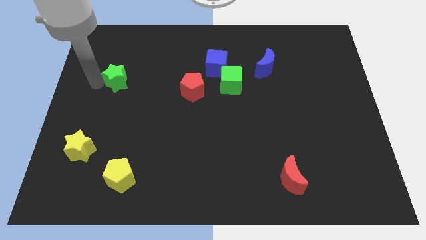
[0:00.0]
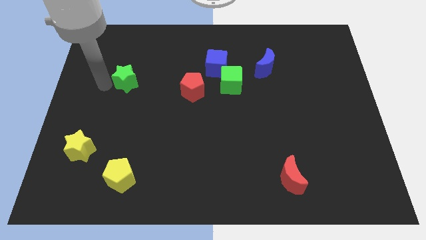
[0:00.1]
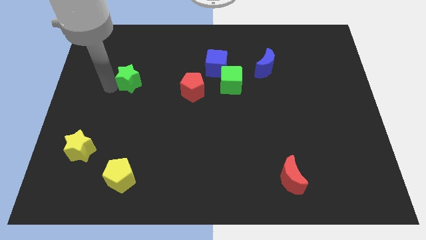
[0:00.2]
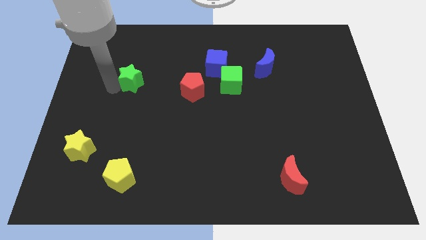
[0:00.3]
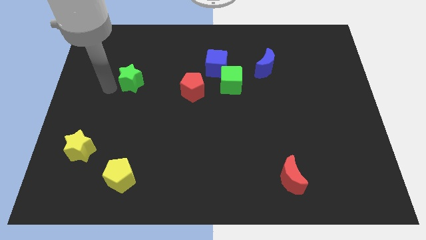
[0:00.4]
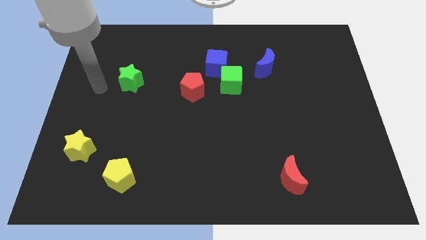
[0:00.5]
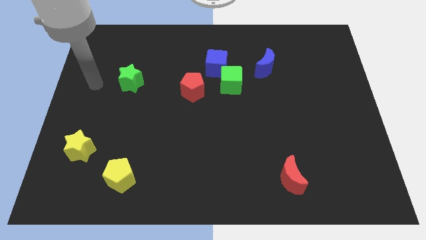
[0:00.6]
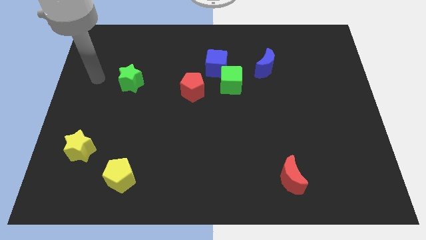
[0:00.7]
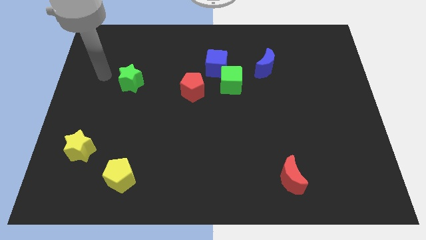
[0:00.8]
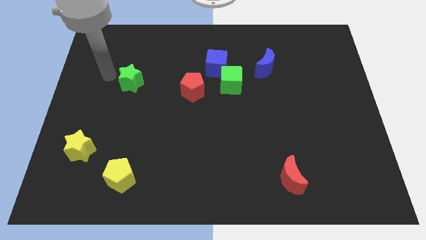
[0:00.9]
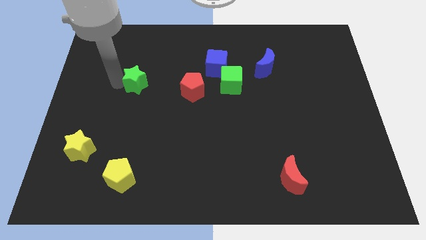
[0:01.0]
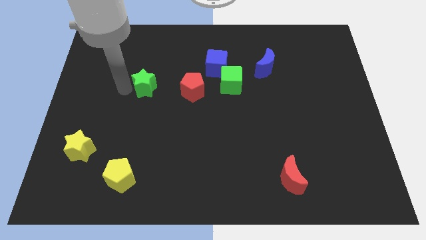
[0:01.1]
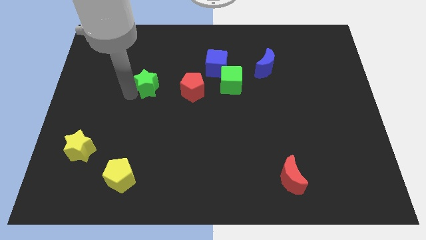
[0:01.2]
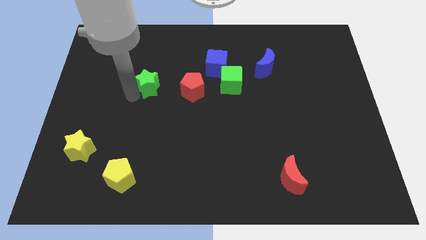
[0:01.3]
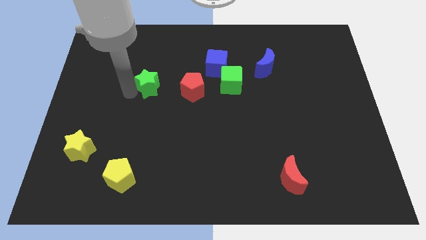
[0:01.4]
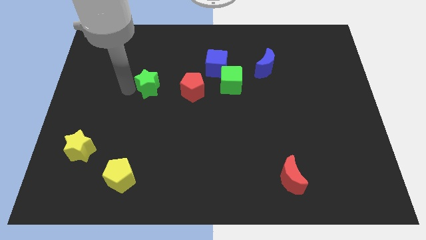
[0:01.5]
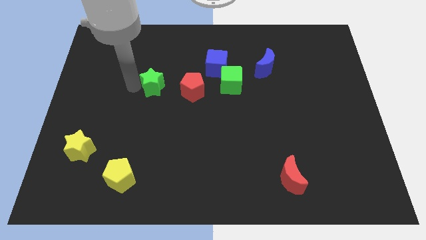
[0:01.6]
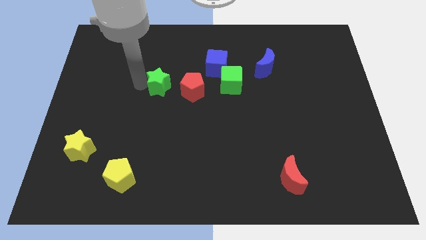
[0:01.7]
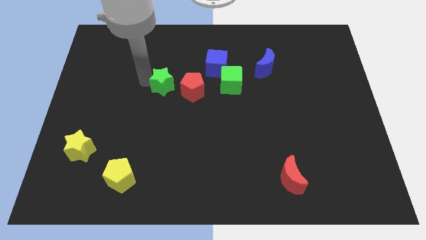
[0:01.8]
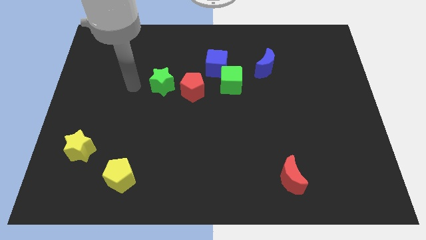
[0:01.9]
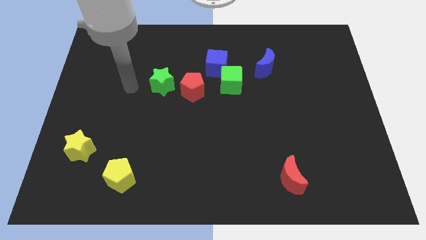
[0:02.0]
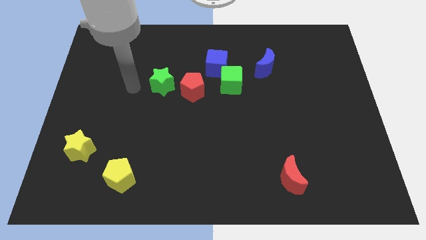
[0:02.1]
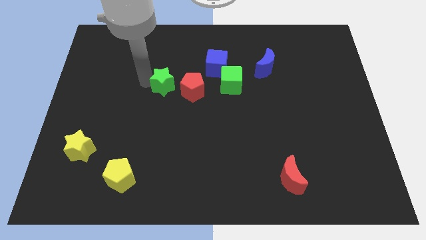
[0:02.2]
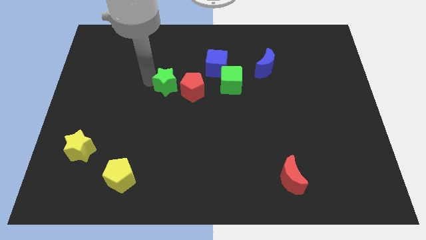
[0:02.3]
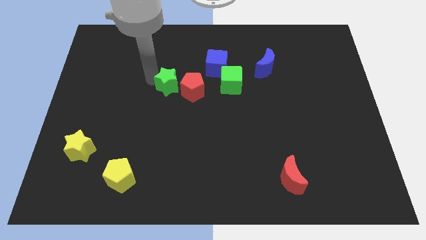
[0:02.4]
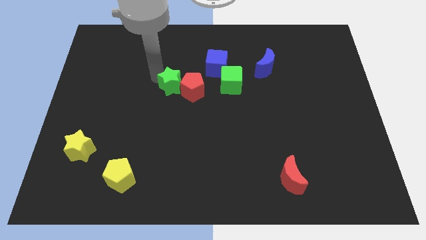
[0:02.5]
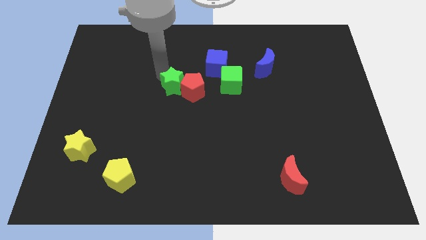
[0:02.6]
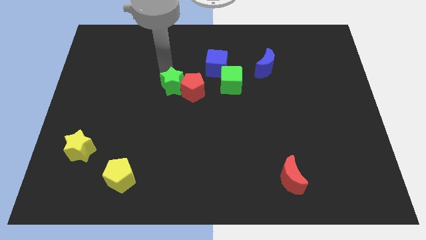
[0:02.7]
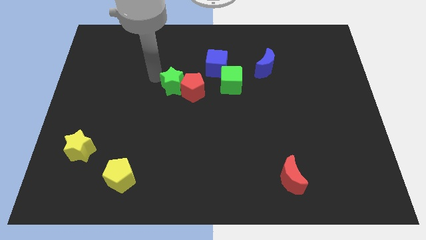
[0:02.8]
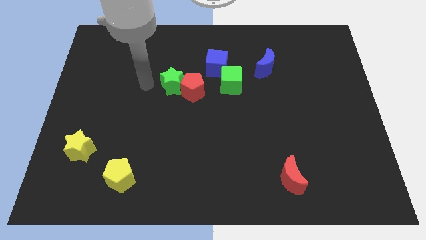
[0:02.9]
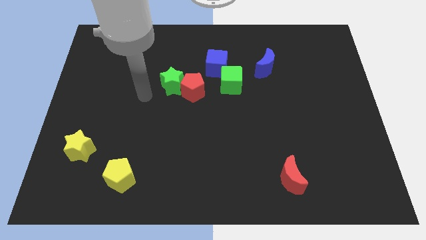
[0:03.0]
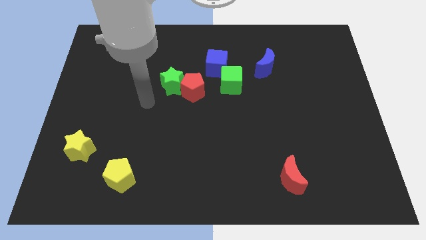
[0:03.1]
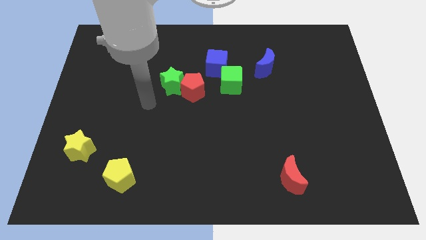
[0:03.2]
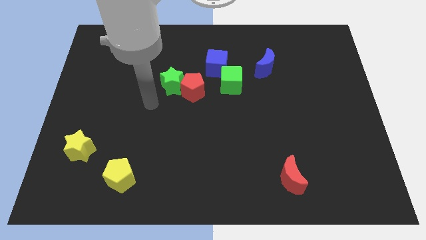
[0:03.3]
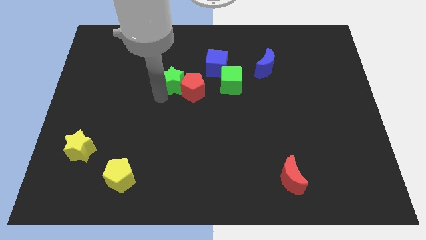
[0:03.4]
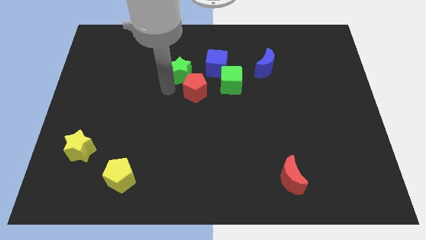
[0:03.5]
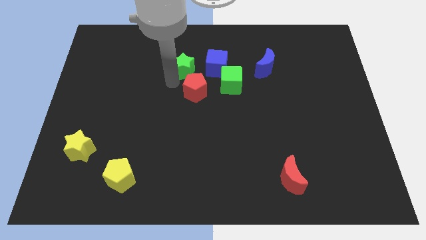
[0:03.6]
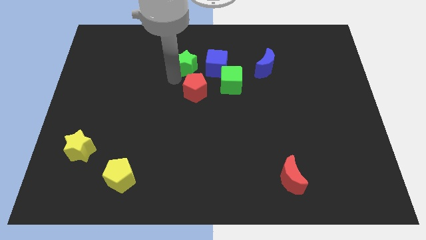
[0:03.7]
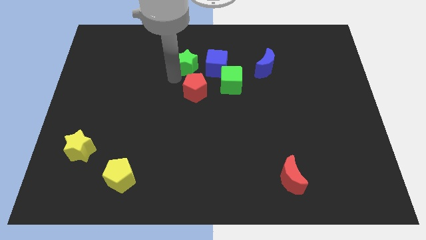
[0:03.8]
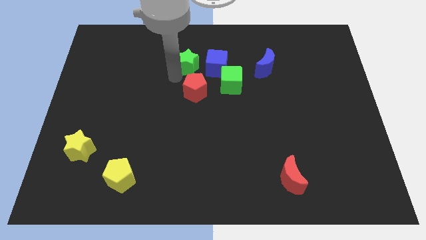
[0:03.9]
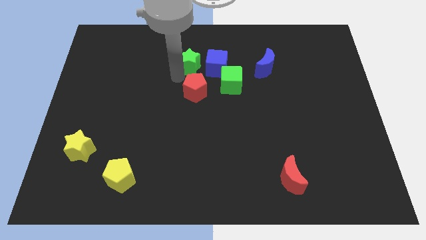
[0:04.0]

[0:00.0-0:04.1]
place green star to the left of blue cube

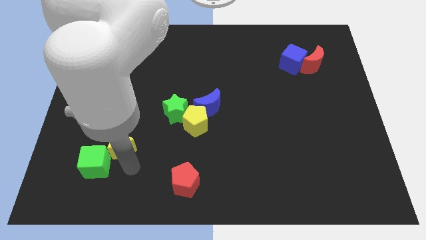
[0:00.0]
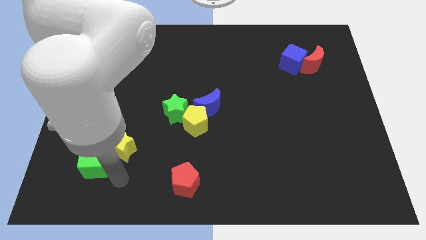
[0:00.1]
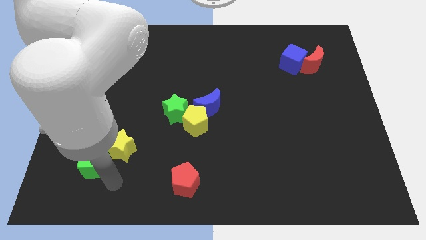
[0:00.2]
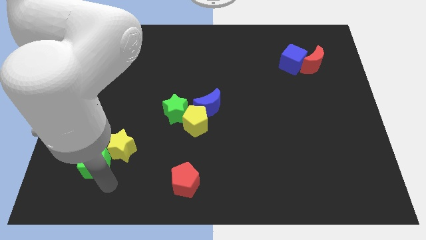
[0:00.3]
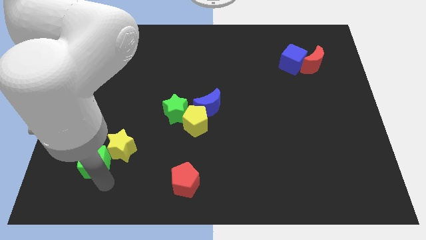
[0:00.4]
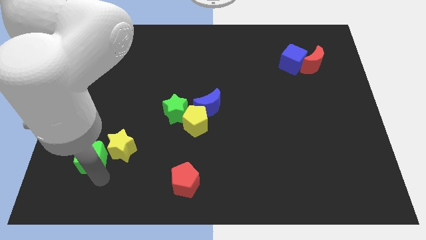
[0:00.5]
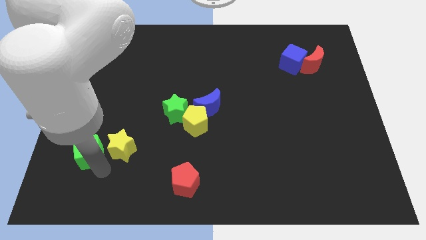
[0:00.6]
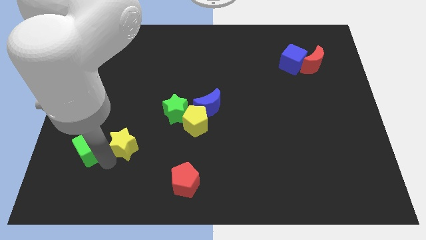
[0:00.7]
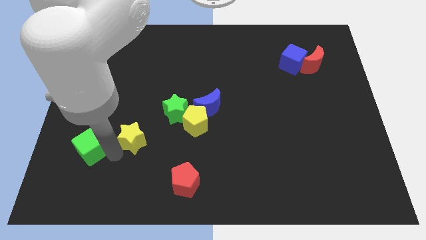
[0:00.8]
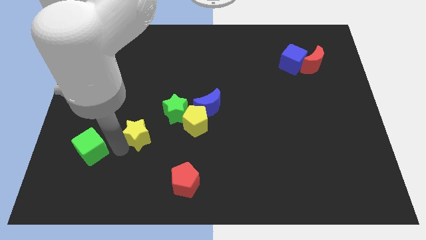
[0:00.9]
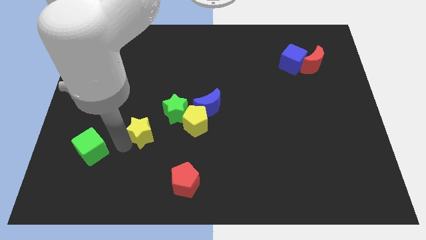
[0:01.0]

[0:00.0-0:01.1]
separate yellow star and green cube

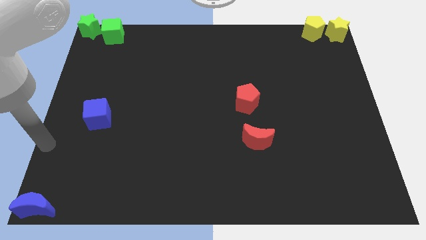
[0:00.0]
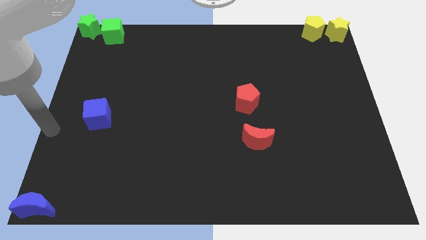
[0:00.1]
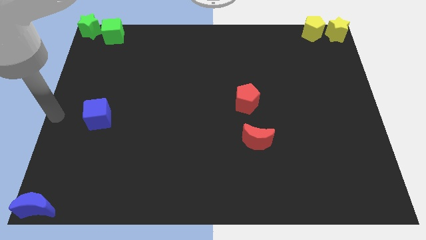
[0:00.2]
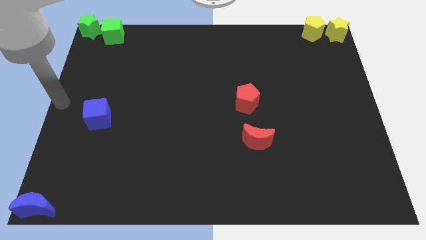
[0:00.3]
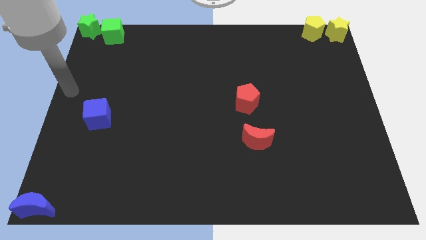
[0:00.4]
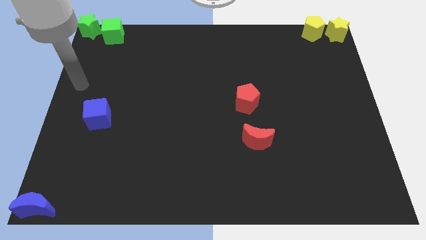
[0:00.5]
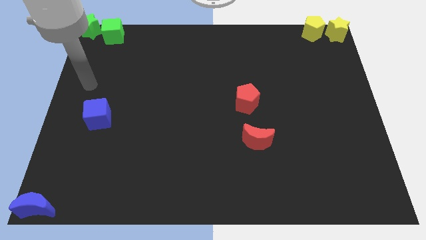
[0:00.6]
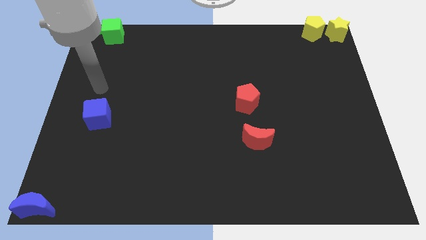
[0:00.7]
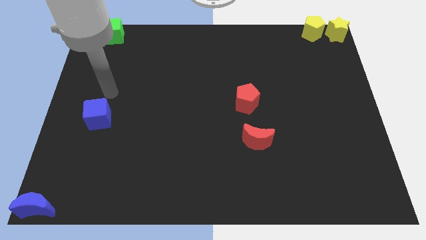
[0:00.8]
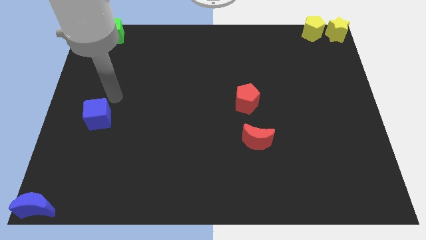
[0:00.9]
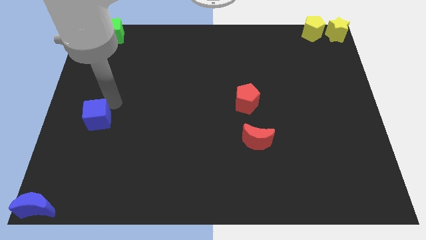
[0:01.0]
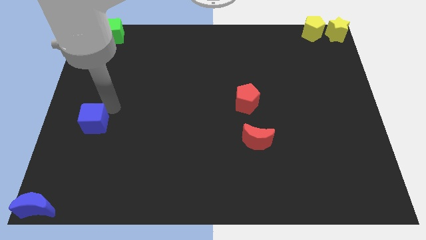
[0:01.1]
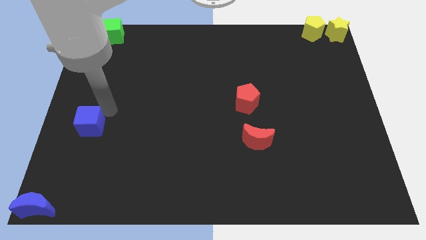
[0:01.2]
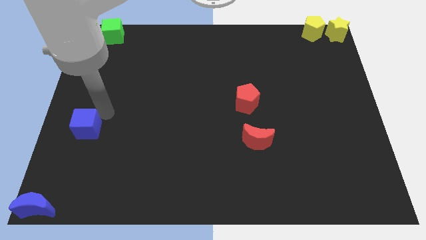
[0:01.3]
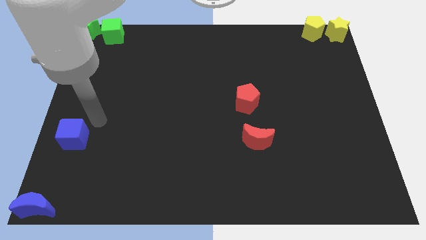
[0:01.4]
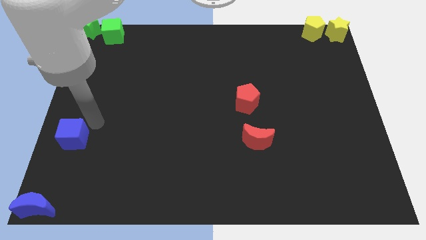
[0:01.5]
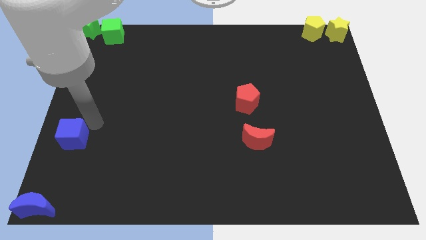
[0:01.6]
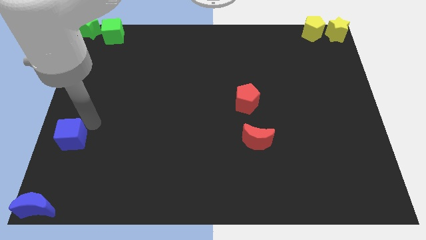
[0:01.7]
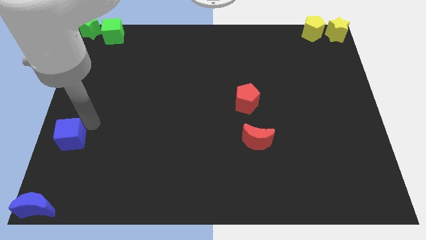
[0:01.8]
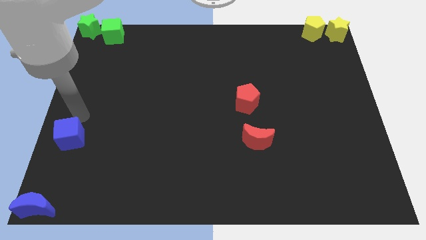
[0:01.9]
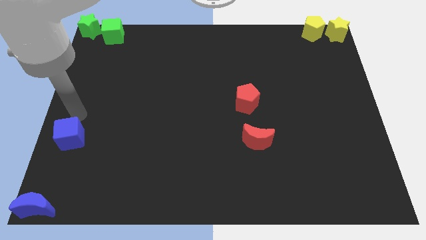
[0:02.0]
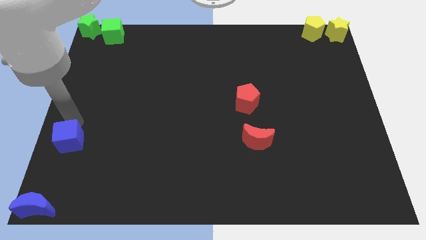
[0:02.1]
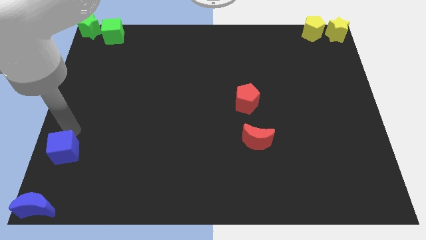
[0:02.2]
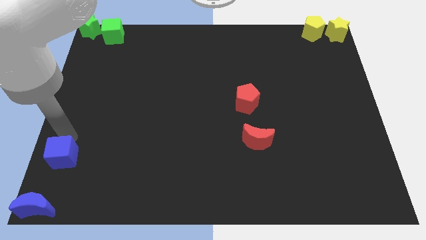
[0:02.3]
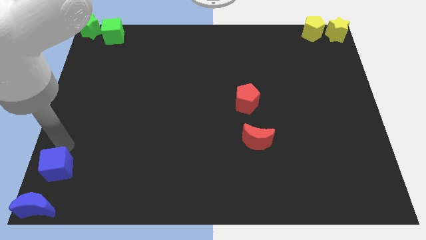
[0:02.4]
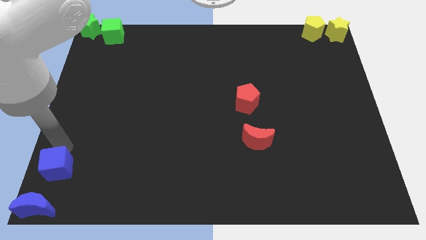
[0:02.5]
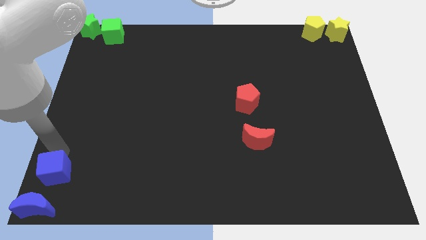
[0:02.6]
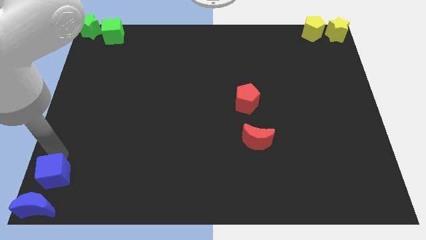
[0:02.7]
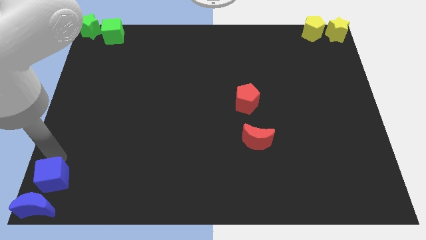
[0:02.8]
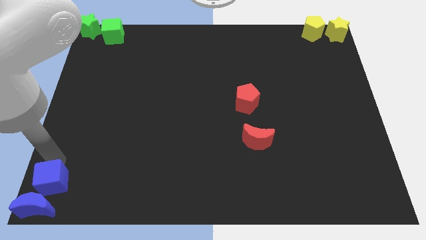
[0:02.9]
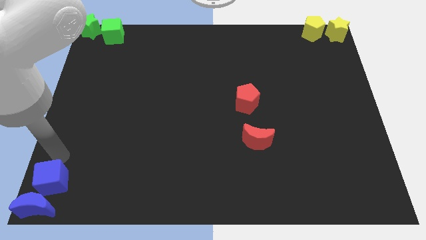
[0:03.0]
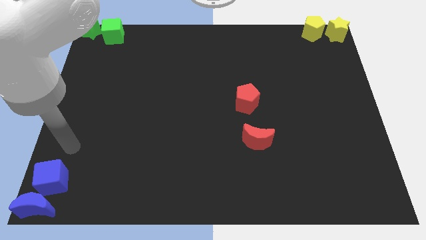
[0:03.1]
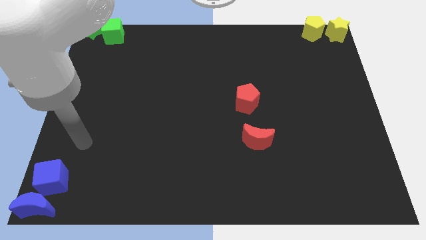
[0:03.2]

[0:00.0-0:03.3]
place blue cube to the top of blue crescent

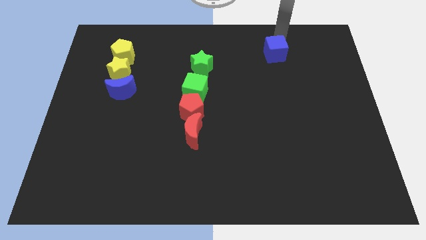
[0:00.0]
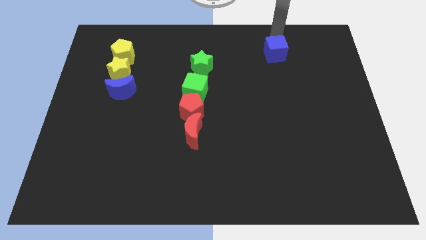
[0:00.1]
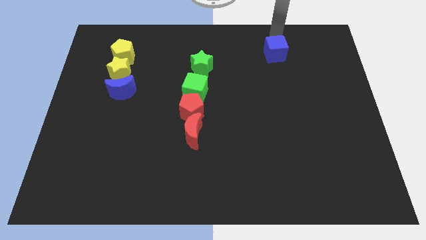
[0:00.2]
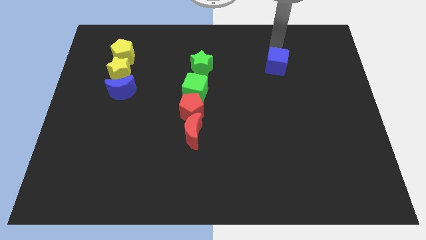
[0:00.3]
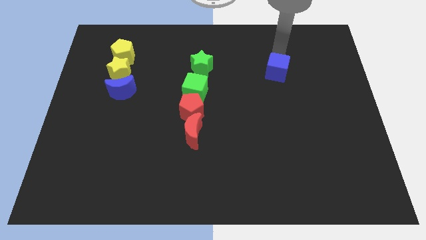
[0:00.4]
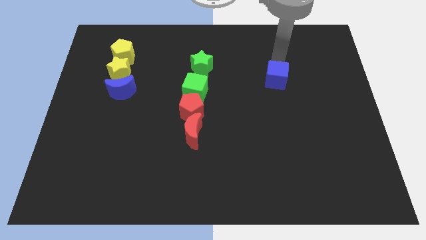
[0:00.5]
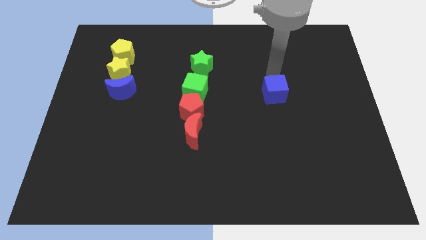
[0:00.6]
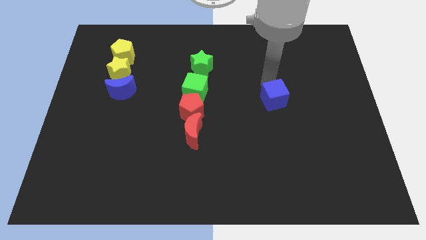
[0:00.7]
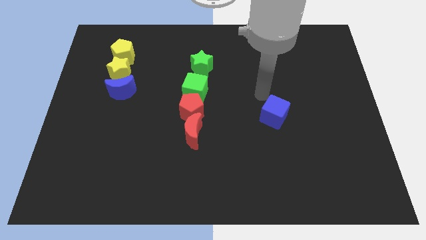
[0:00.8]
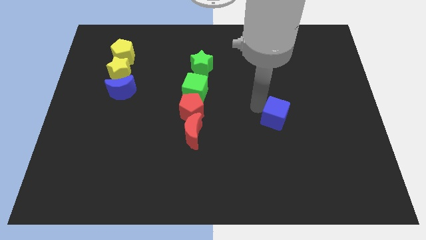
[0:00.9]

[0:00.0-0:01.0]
move the blue cube to the bottom of the board
